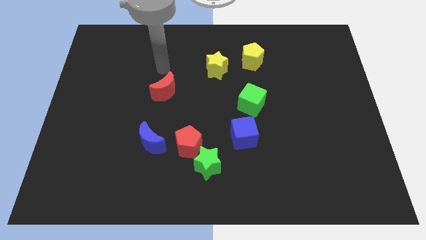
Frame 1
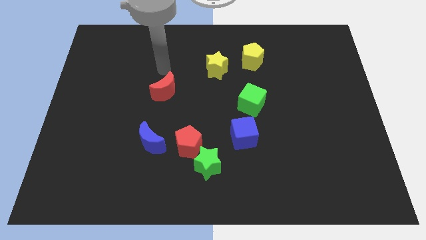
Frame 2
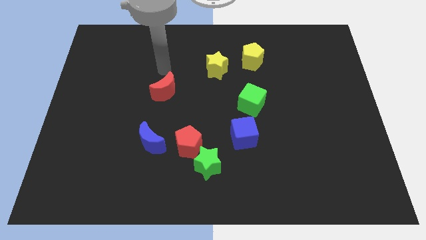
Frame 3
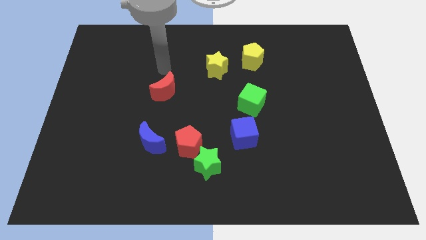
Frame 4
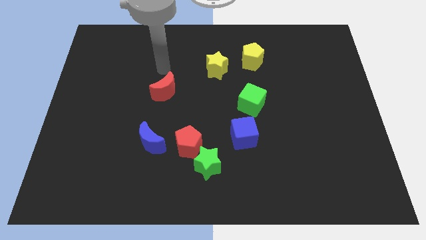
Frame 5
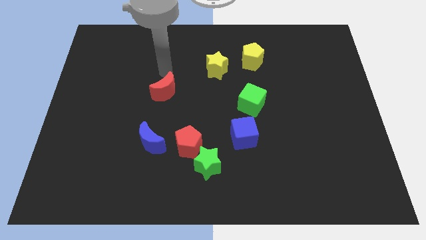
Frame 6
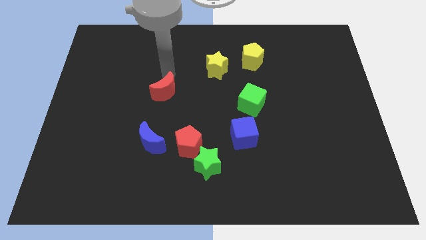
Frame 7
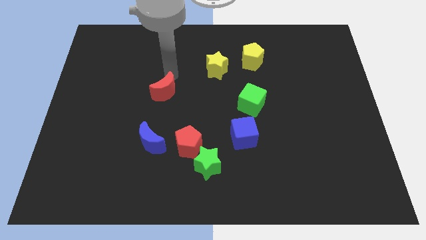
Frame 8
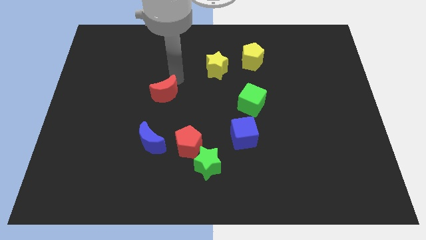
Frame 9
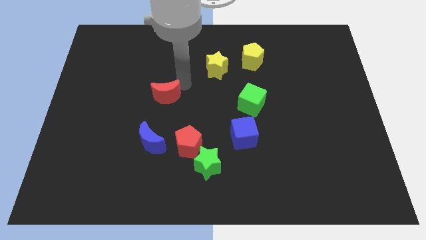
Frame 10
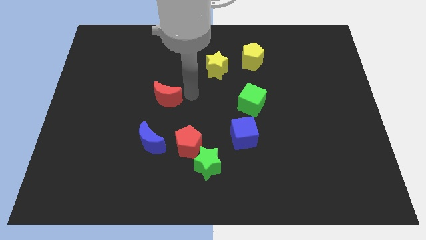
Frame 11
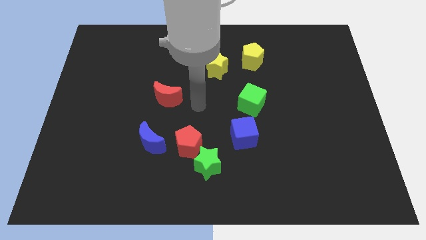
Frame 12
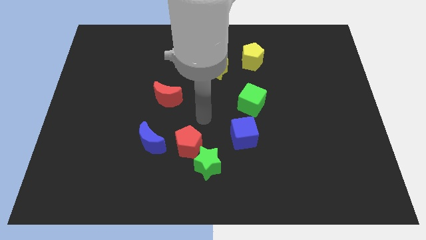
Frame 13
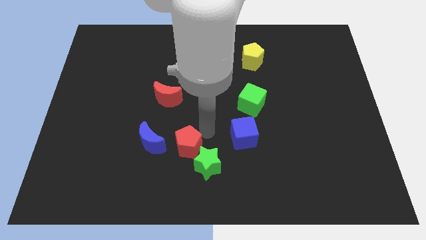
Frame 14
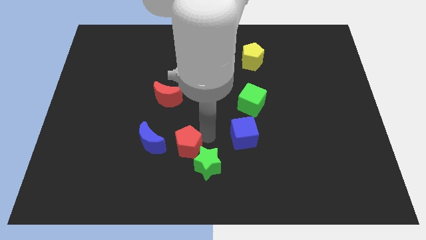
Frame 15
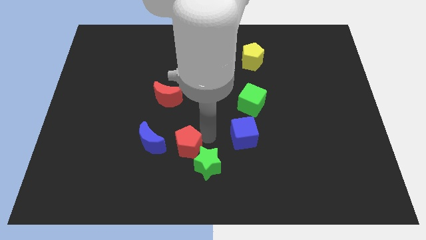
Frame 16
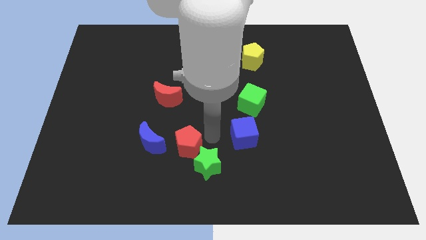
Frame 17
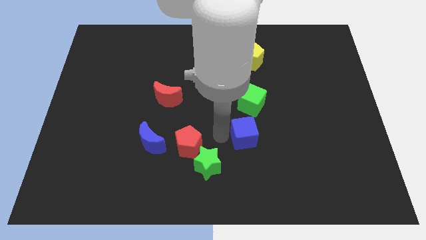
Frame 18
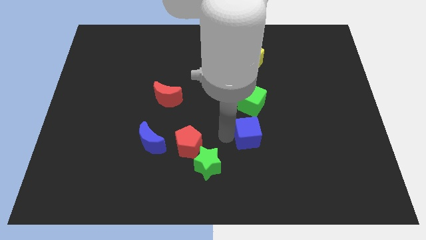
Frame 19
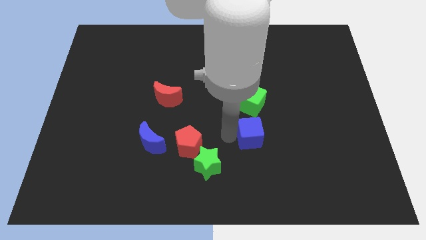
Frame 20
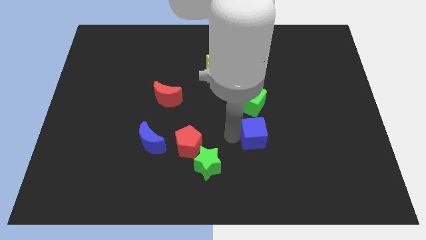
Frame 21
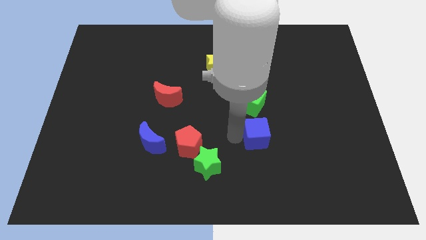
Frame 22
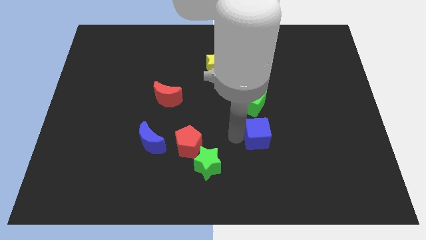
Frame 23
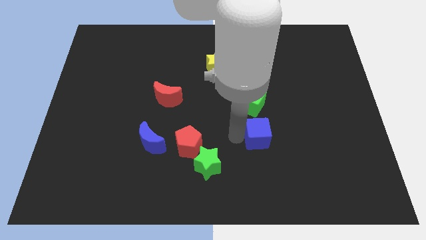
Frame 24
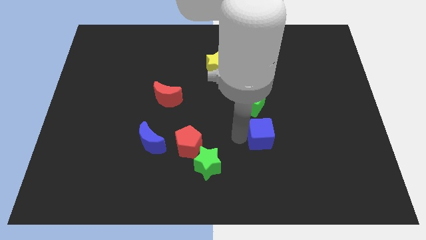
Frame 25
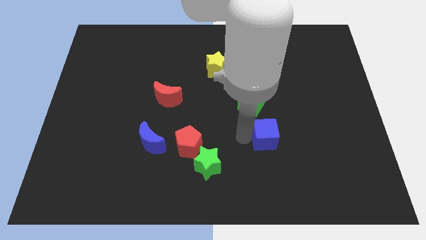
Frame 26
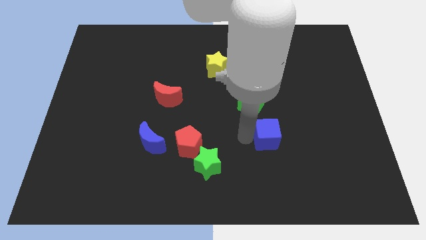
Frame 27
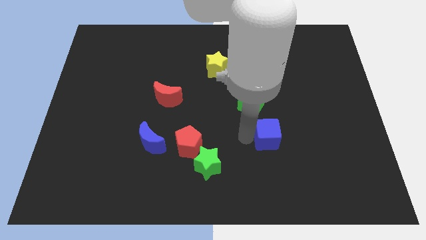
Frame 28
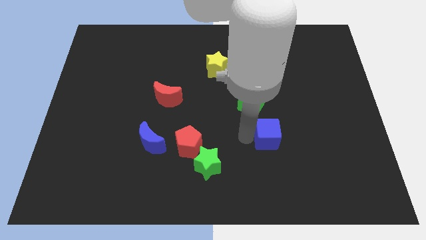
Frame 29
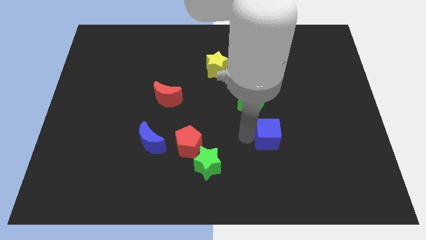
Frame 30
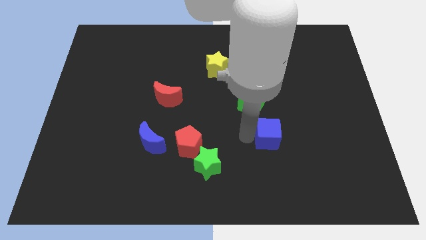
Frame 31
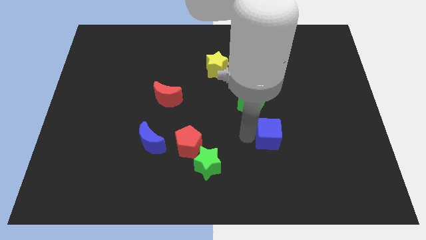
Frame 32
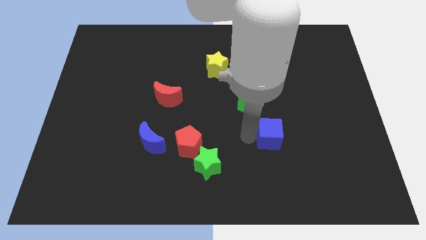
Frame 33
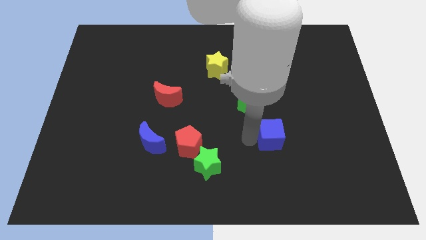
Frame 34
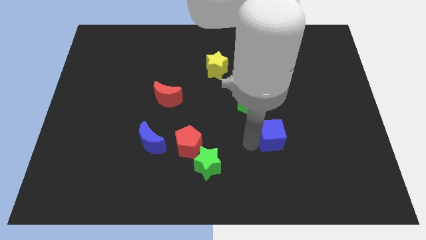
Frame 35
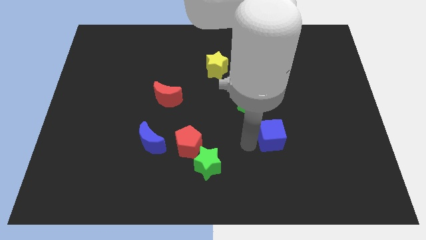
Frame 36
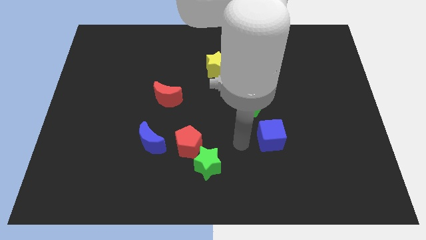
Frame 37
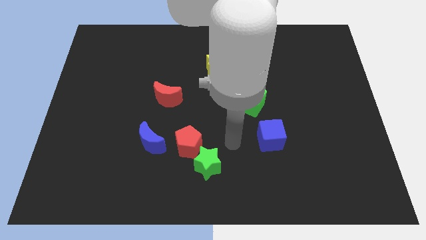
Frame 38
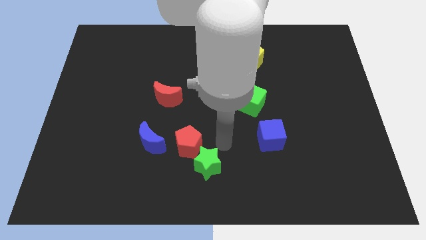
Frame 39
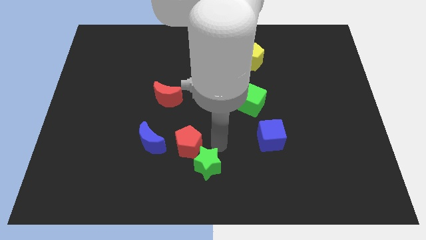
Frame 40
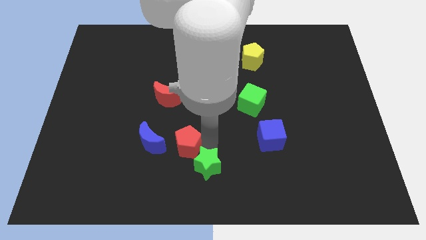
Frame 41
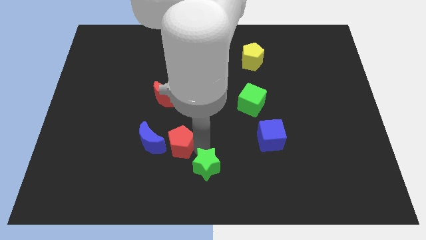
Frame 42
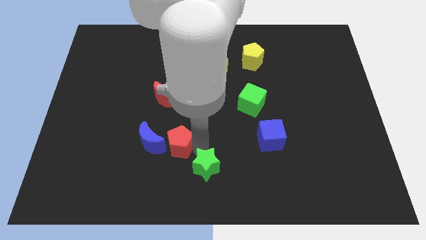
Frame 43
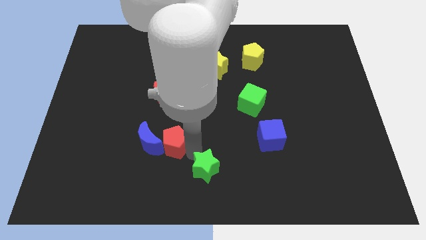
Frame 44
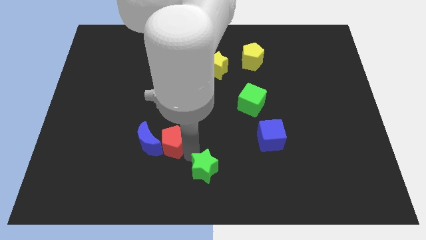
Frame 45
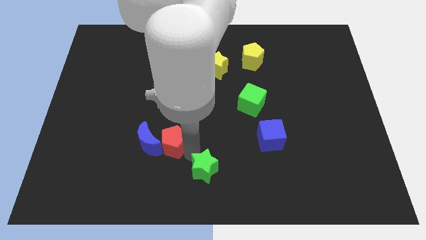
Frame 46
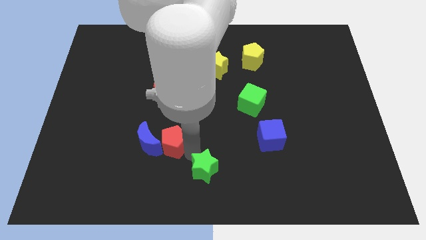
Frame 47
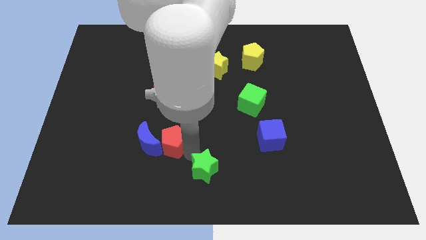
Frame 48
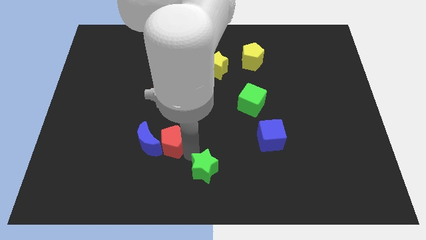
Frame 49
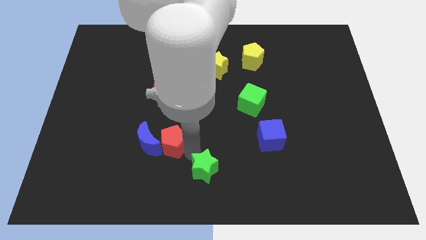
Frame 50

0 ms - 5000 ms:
move the blue cube towards the right

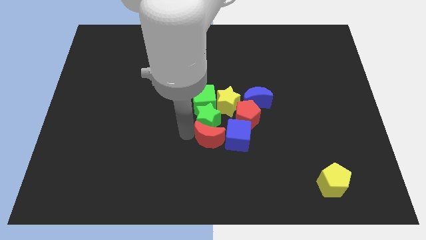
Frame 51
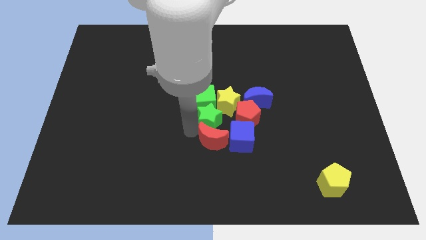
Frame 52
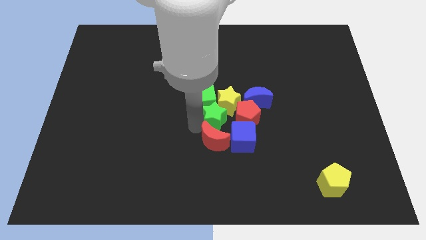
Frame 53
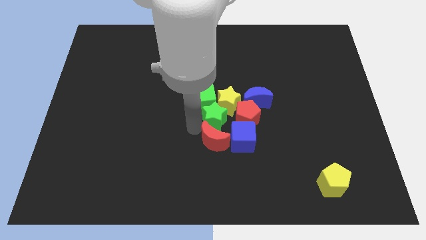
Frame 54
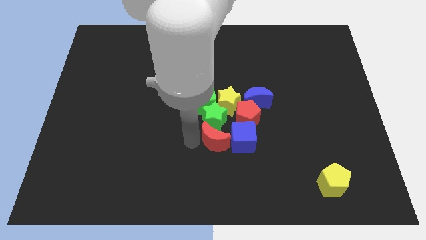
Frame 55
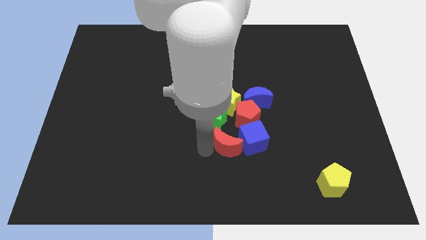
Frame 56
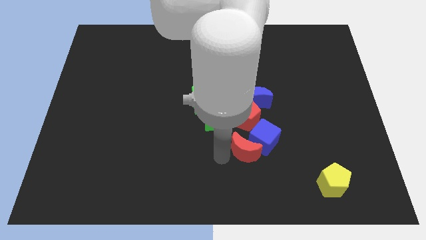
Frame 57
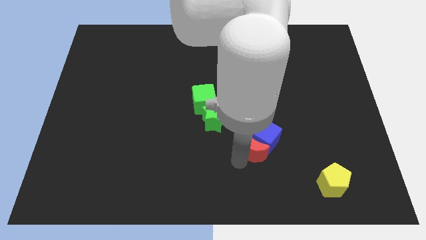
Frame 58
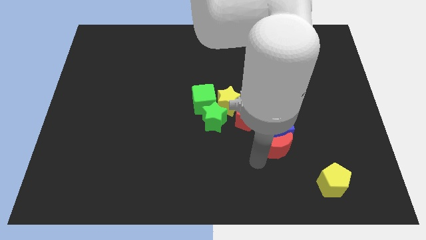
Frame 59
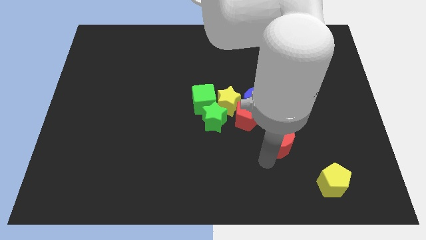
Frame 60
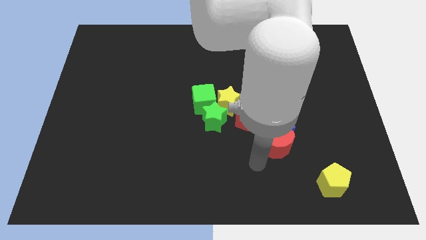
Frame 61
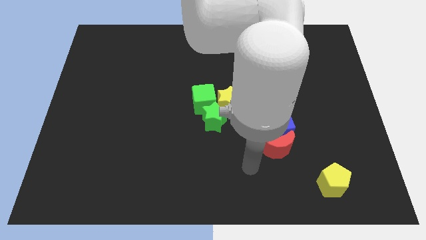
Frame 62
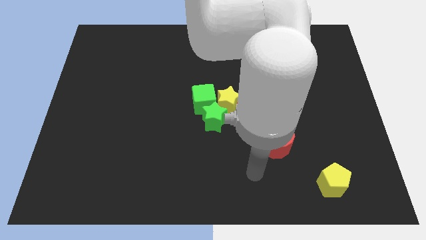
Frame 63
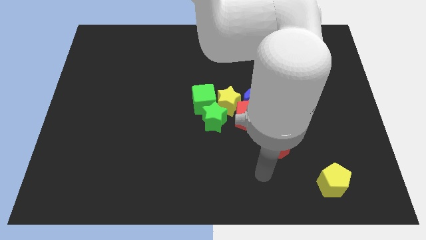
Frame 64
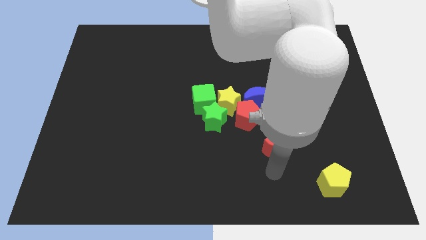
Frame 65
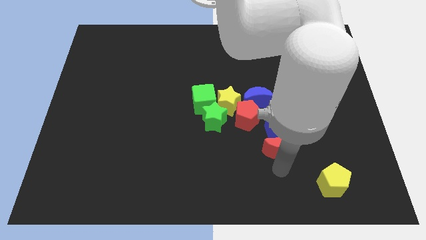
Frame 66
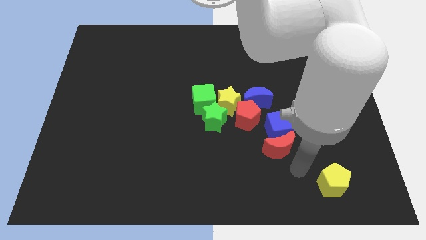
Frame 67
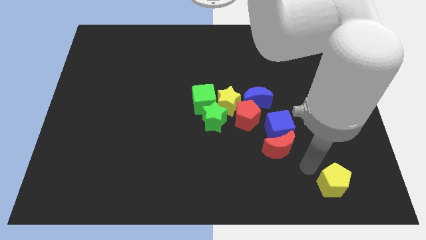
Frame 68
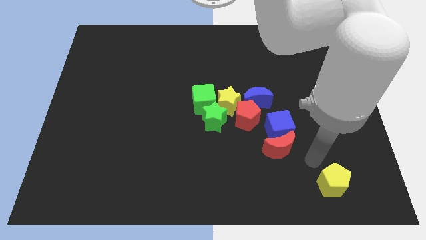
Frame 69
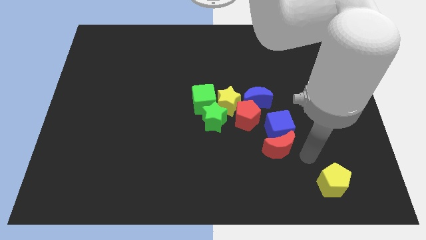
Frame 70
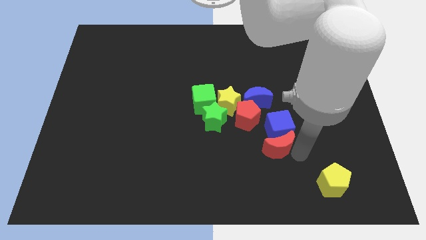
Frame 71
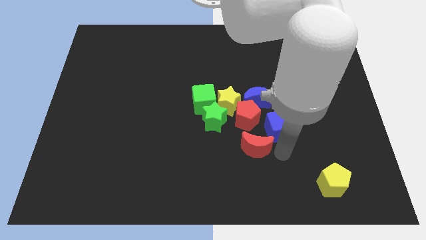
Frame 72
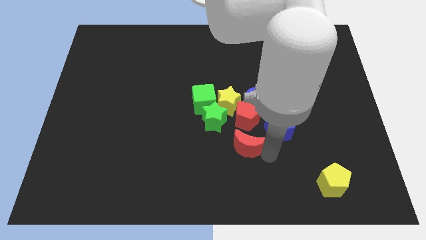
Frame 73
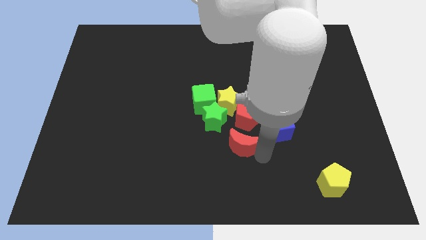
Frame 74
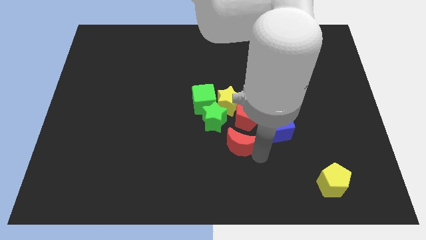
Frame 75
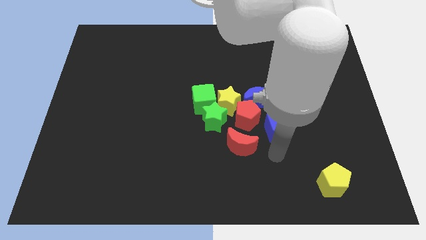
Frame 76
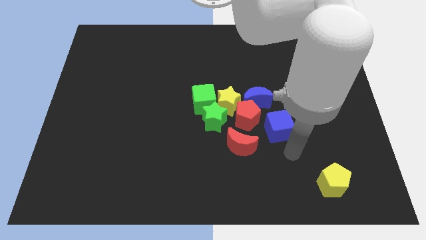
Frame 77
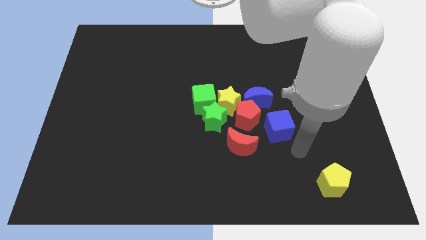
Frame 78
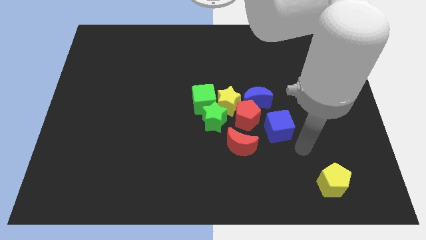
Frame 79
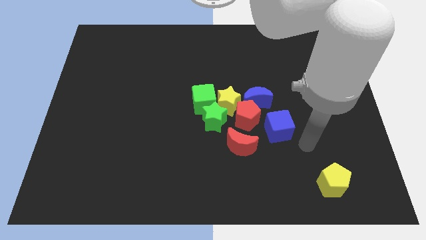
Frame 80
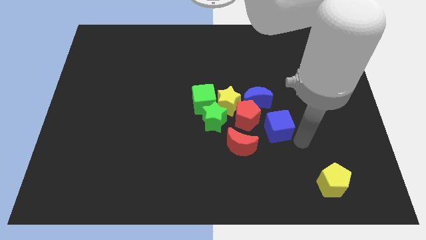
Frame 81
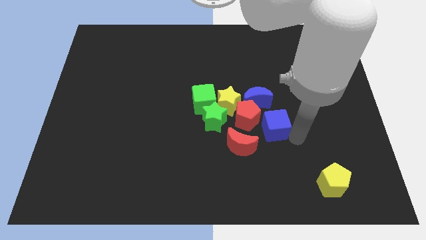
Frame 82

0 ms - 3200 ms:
push the red crescent to the bottom of the red pentagon

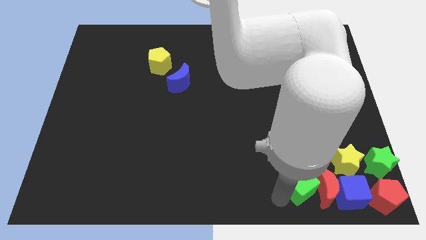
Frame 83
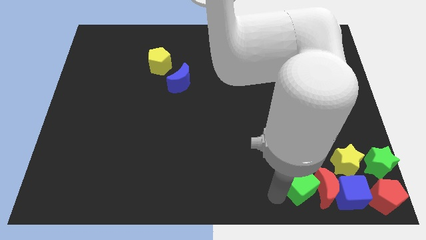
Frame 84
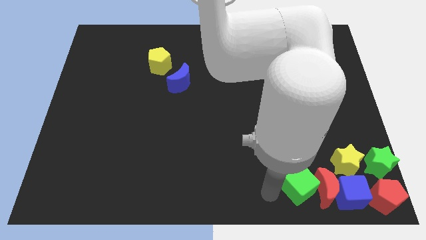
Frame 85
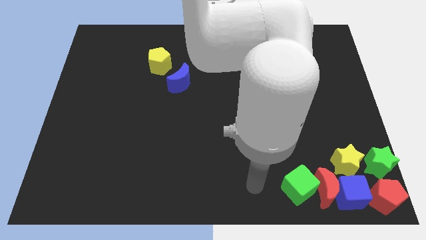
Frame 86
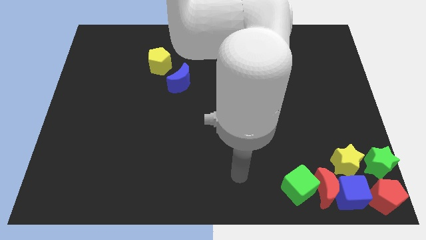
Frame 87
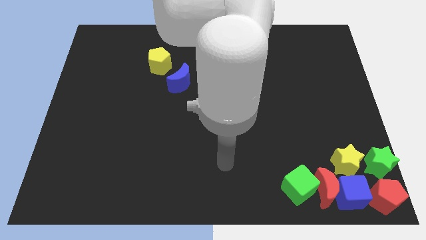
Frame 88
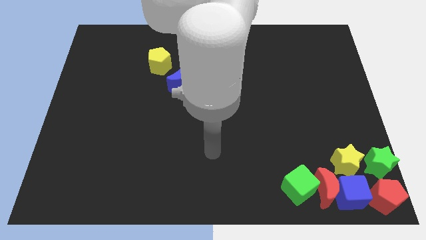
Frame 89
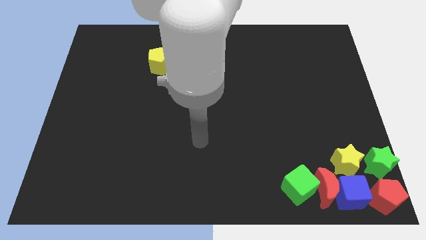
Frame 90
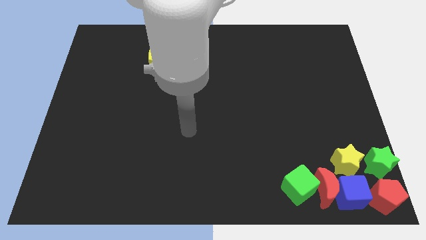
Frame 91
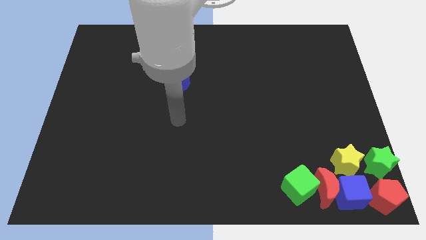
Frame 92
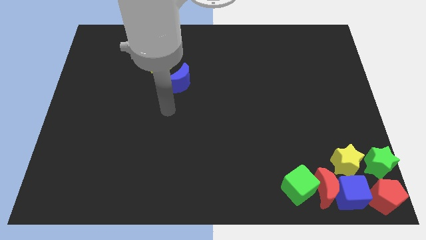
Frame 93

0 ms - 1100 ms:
move the arm away from the green cube
